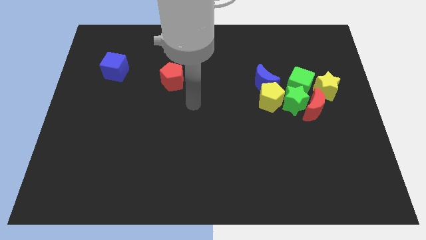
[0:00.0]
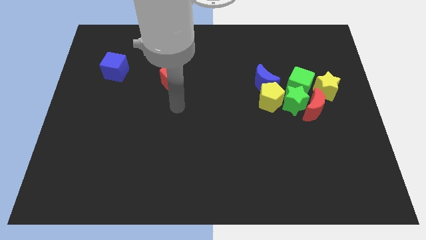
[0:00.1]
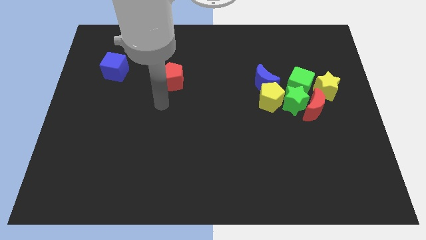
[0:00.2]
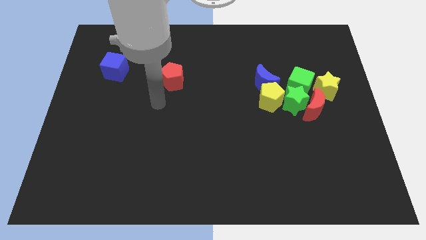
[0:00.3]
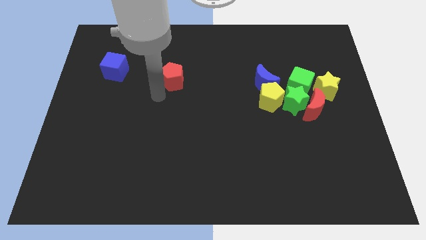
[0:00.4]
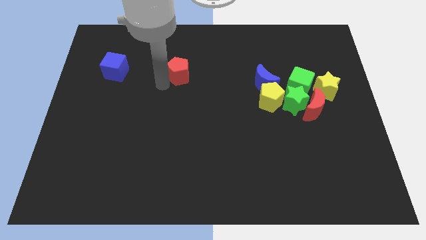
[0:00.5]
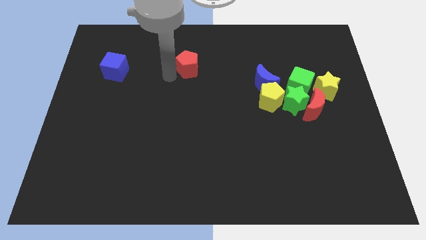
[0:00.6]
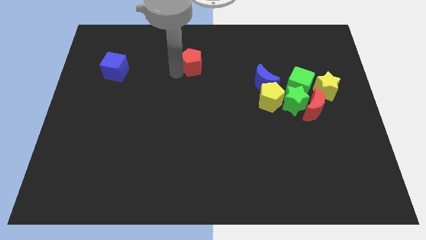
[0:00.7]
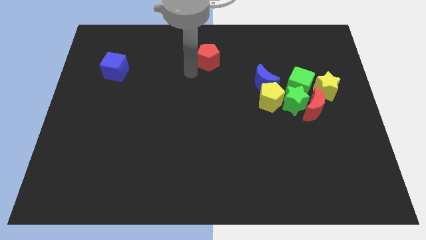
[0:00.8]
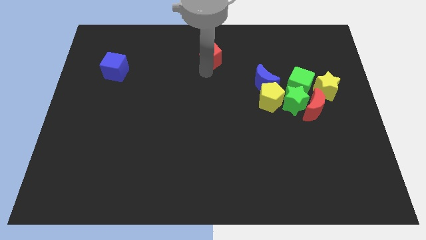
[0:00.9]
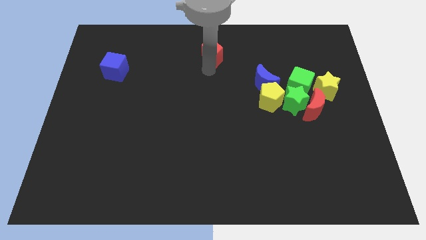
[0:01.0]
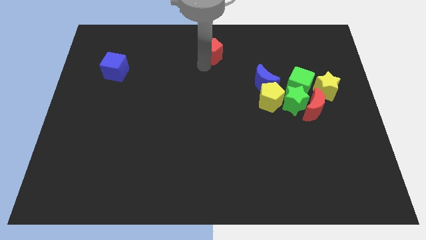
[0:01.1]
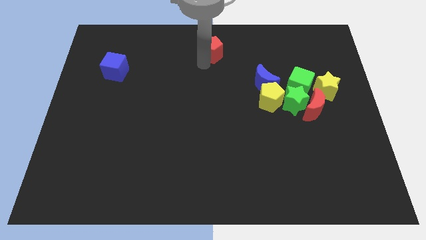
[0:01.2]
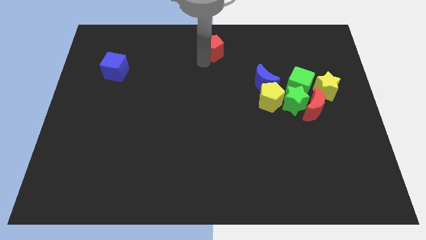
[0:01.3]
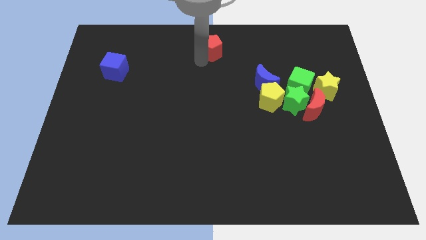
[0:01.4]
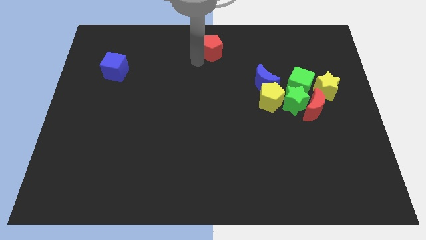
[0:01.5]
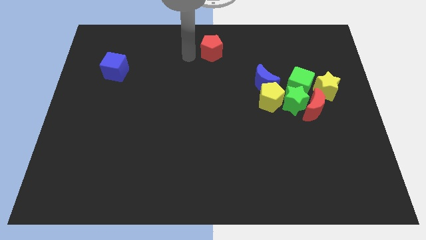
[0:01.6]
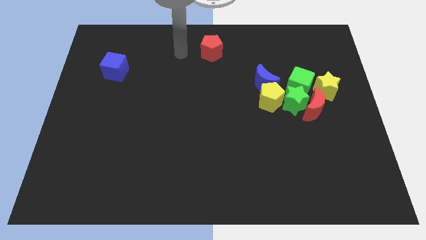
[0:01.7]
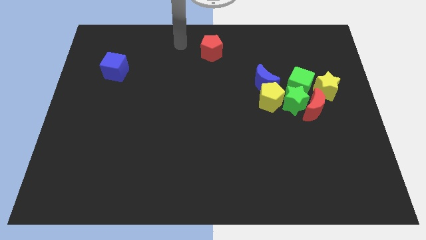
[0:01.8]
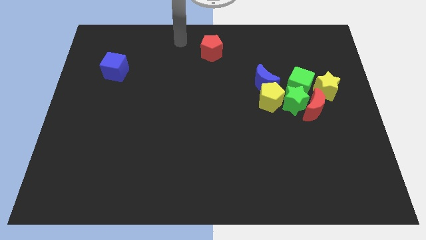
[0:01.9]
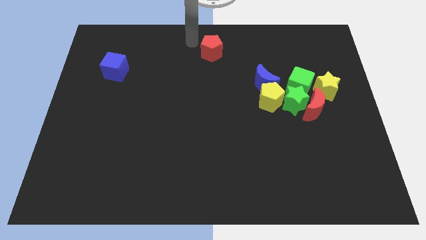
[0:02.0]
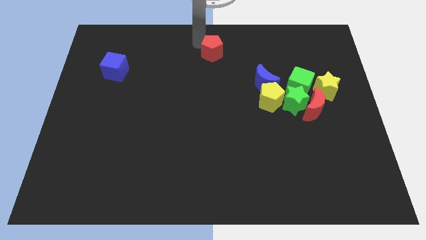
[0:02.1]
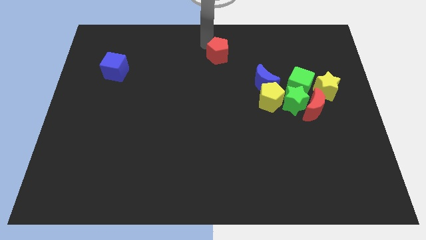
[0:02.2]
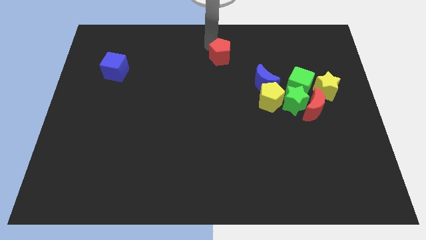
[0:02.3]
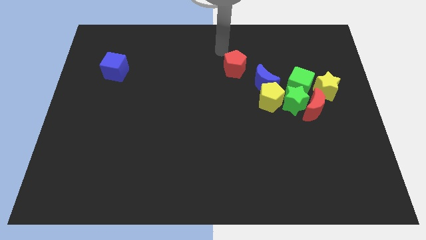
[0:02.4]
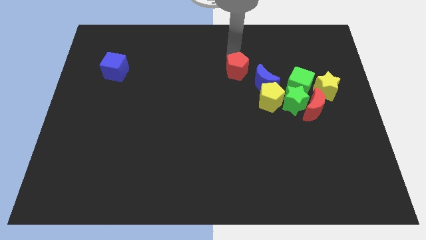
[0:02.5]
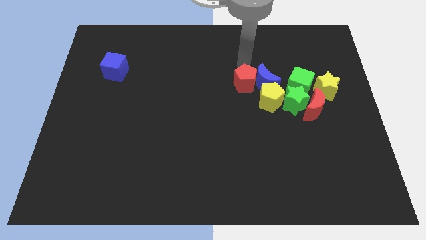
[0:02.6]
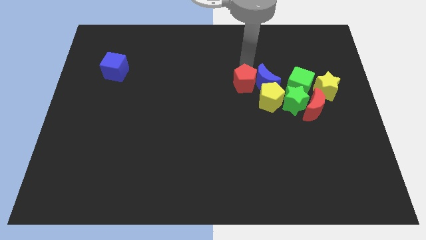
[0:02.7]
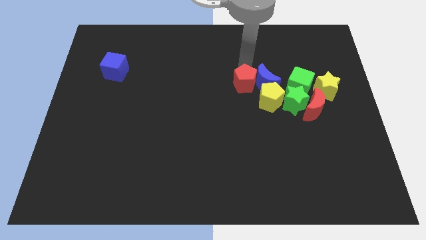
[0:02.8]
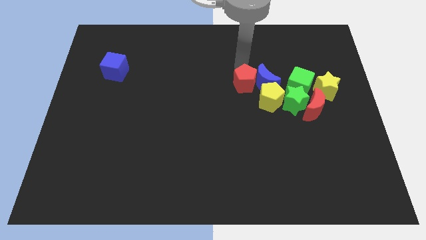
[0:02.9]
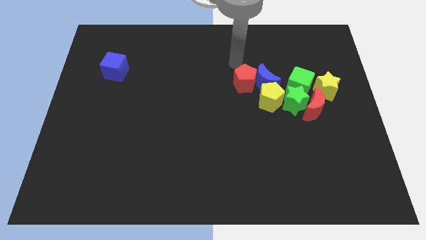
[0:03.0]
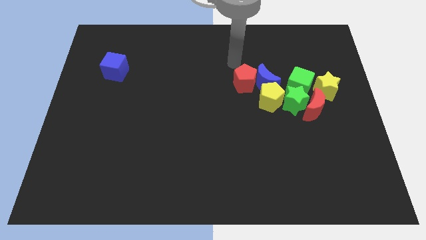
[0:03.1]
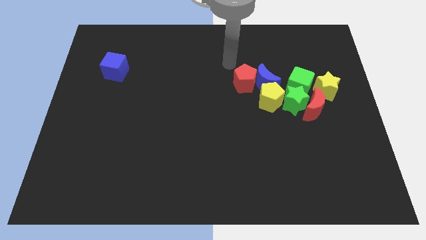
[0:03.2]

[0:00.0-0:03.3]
put the red pentagon at the left of the blue moon

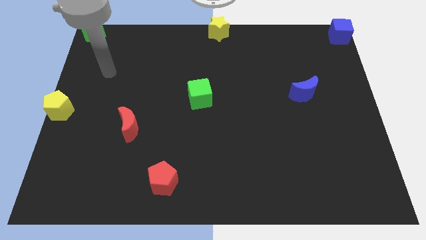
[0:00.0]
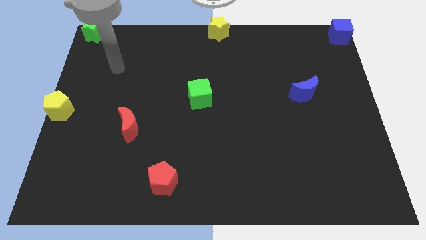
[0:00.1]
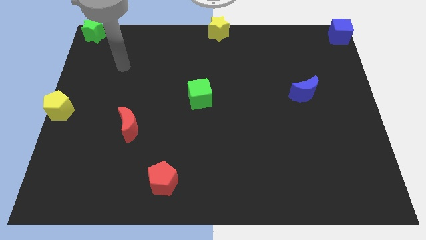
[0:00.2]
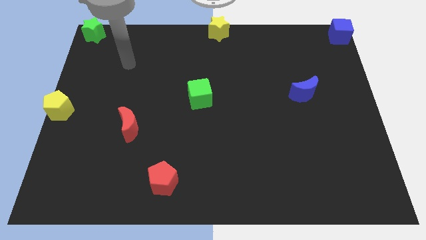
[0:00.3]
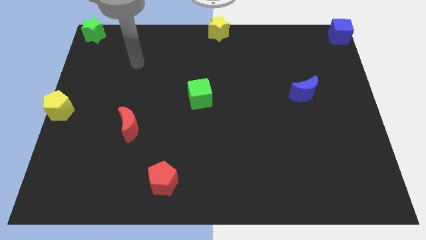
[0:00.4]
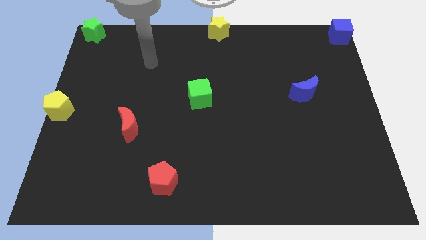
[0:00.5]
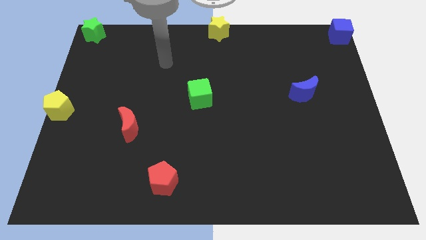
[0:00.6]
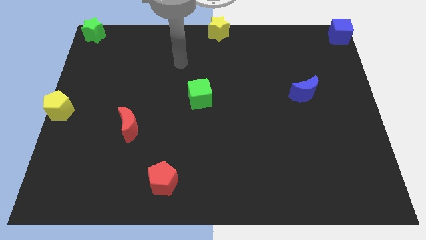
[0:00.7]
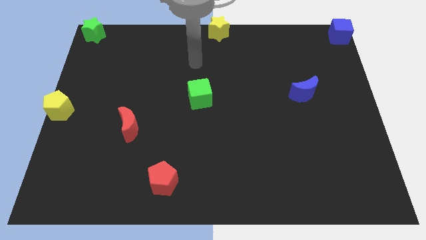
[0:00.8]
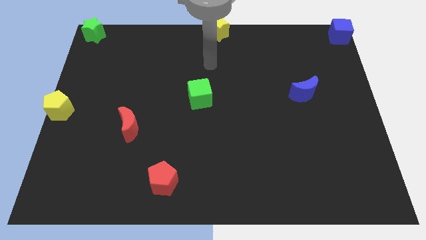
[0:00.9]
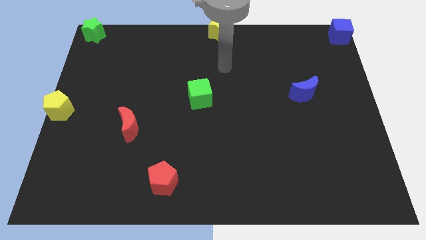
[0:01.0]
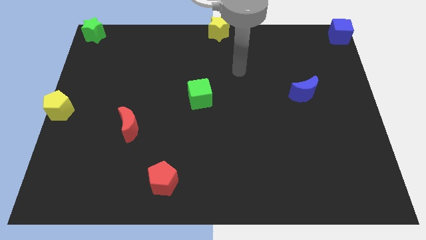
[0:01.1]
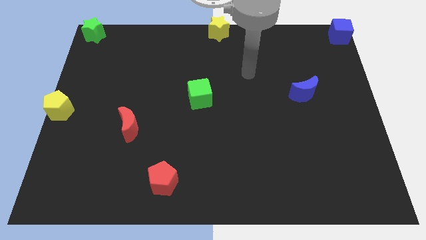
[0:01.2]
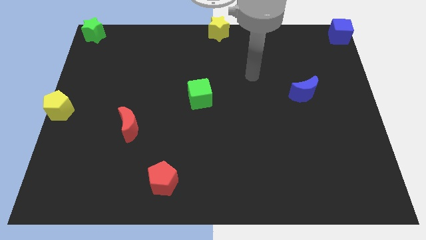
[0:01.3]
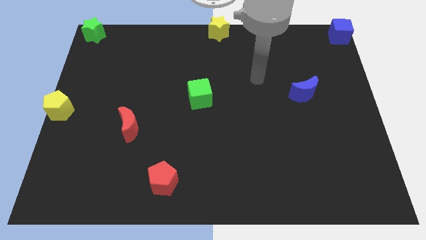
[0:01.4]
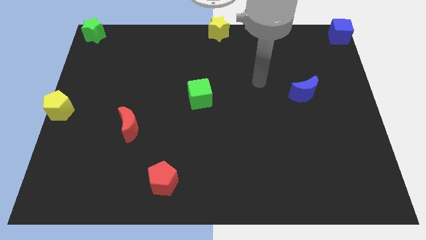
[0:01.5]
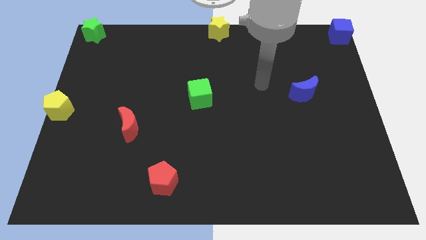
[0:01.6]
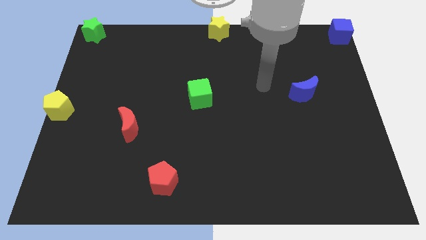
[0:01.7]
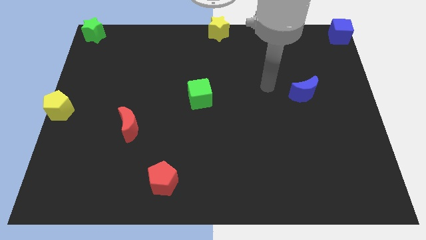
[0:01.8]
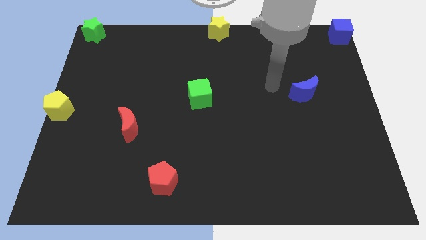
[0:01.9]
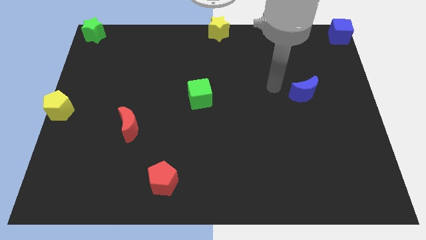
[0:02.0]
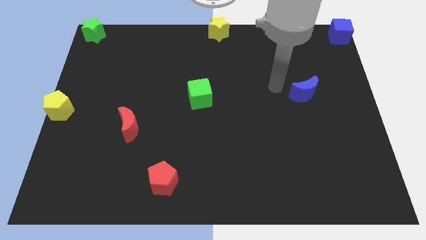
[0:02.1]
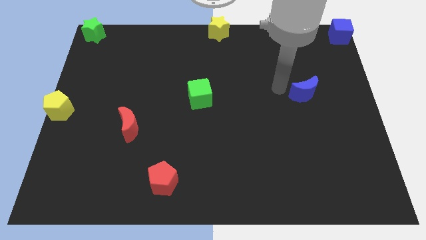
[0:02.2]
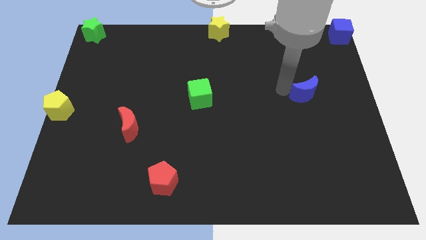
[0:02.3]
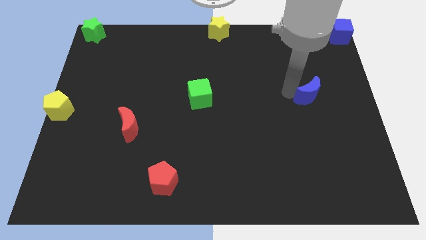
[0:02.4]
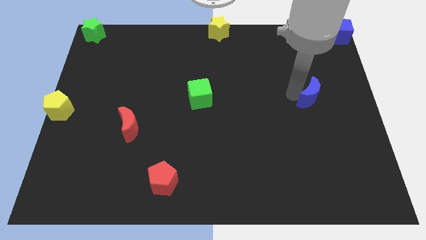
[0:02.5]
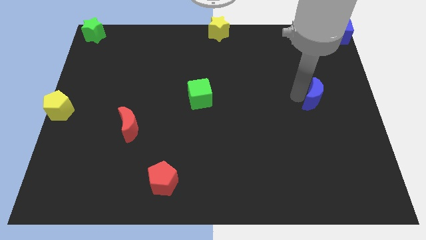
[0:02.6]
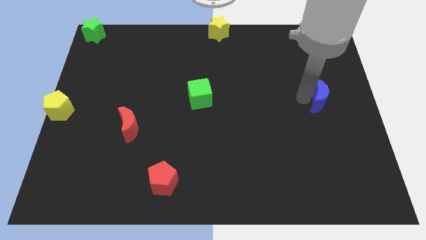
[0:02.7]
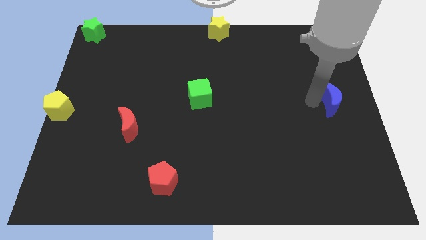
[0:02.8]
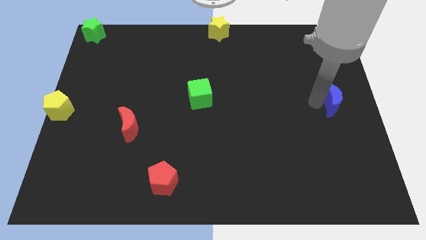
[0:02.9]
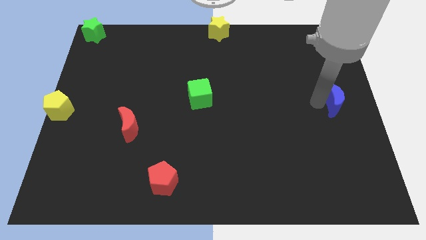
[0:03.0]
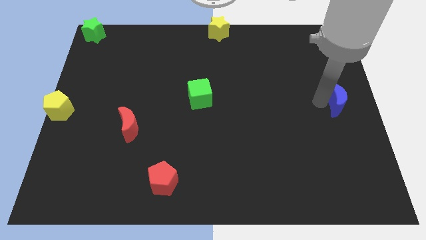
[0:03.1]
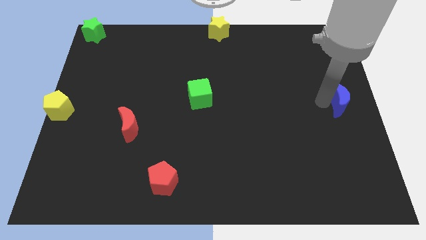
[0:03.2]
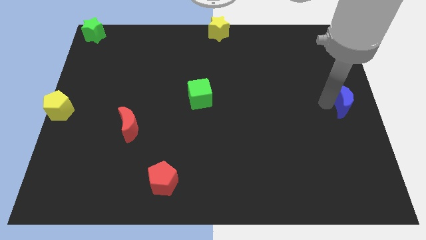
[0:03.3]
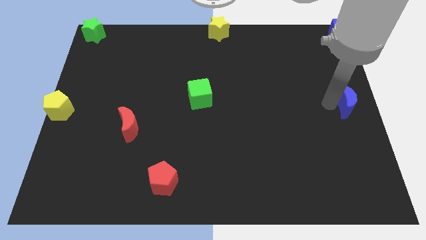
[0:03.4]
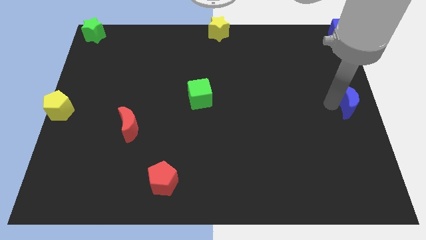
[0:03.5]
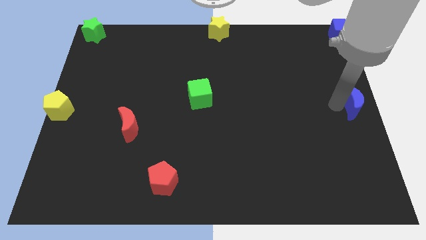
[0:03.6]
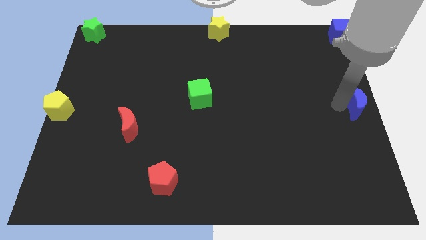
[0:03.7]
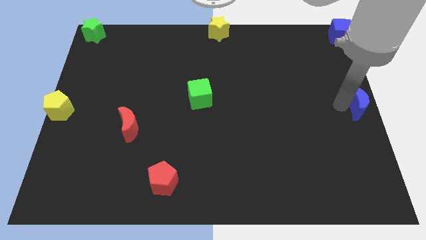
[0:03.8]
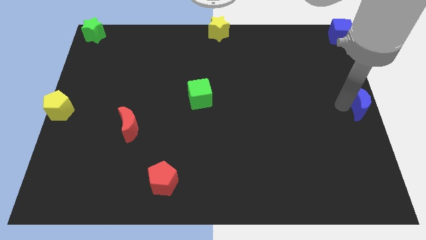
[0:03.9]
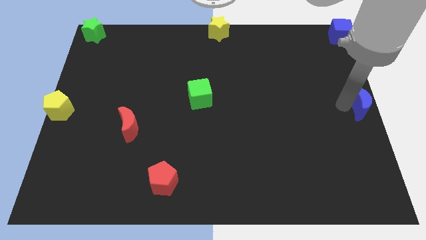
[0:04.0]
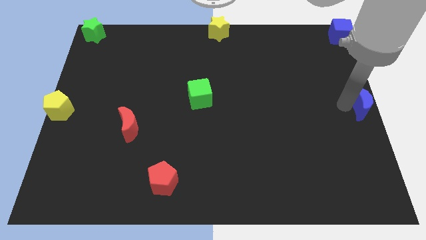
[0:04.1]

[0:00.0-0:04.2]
push blue crescent to the right center

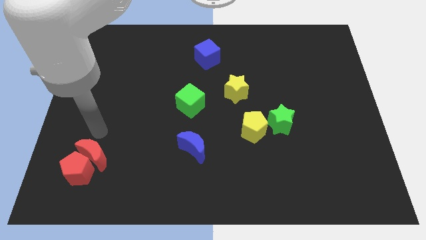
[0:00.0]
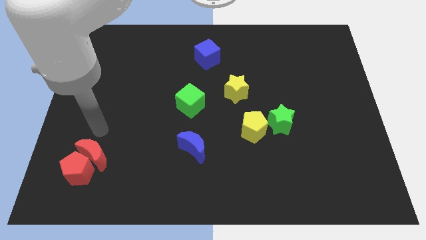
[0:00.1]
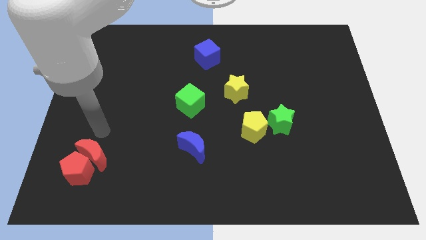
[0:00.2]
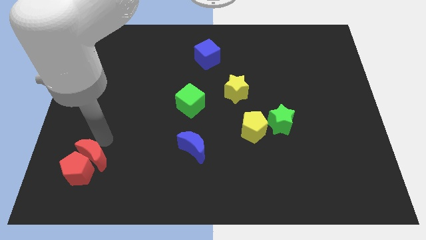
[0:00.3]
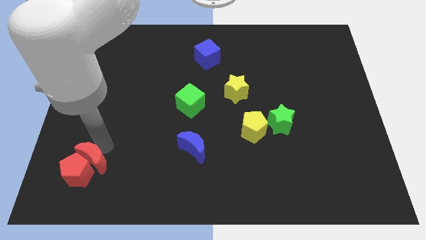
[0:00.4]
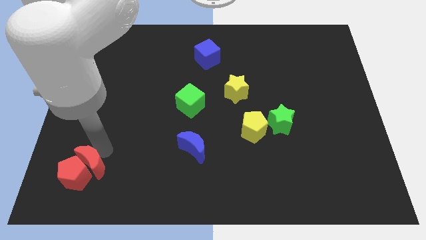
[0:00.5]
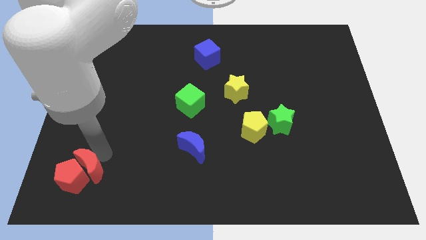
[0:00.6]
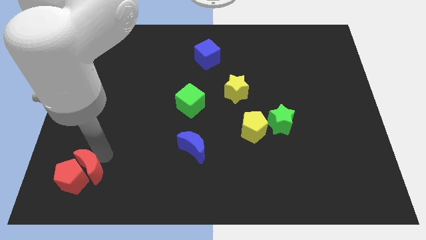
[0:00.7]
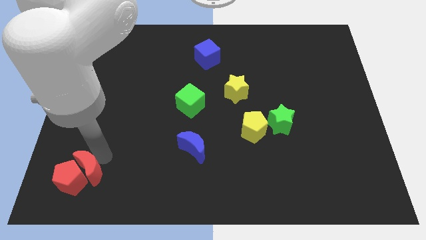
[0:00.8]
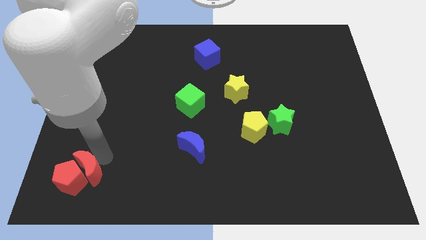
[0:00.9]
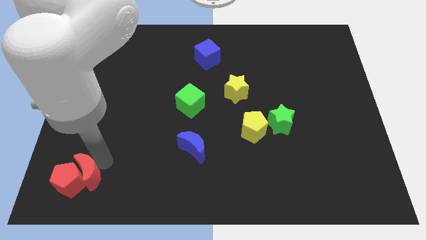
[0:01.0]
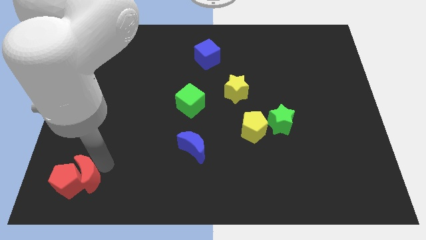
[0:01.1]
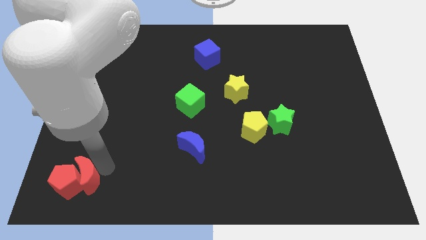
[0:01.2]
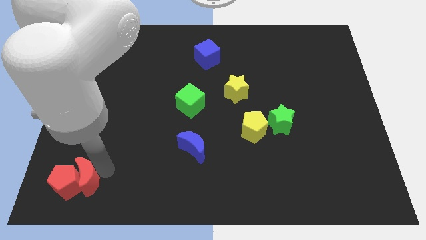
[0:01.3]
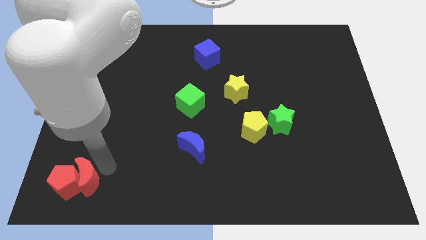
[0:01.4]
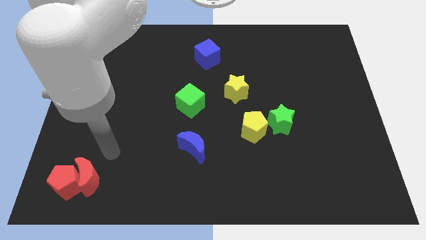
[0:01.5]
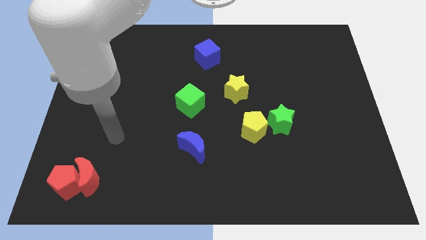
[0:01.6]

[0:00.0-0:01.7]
move the red blocks slightly to the bottom
